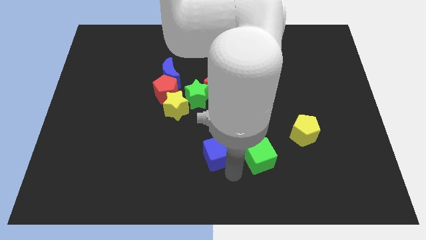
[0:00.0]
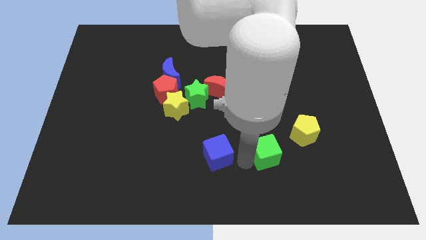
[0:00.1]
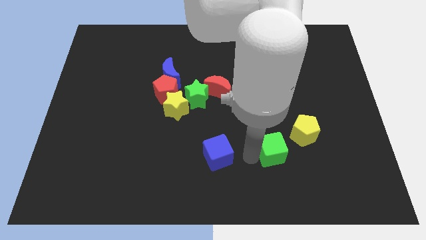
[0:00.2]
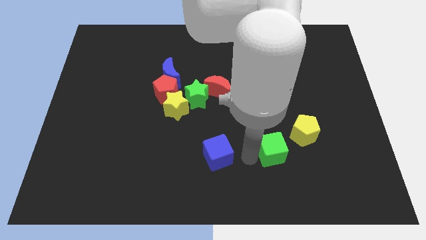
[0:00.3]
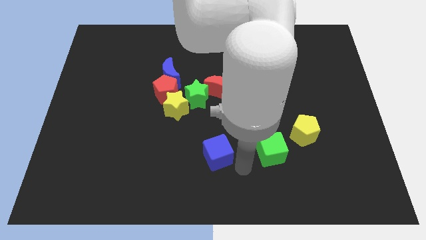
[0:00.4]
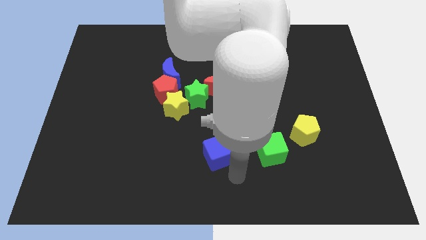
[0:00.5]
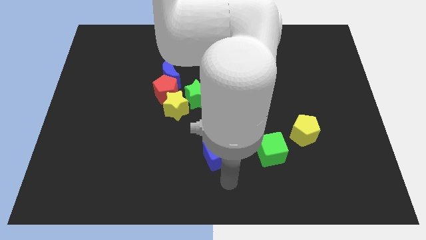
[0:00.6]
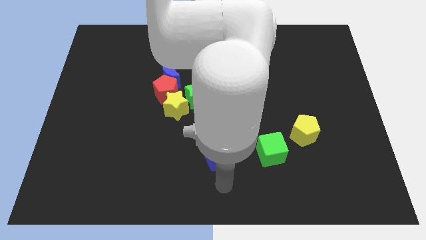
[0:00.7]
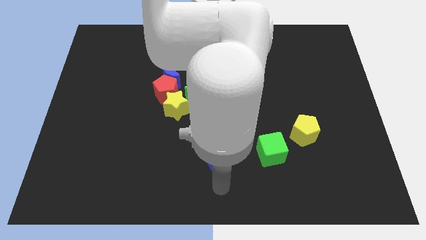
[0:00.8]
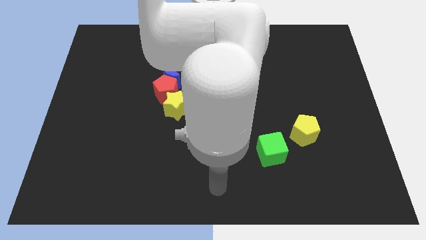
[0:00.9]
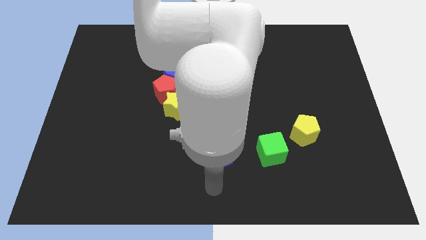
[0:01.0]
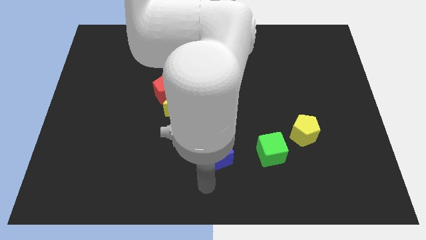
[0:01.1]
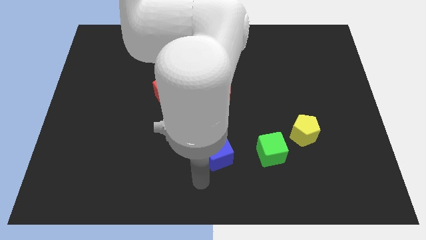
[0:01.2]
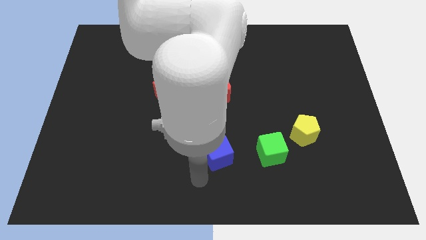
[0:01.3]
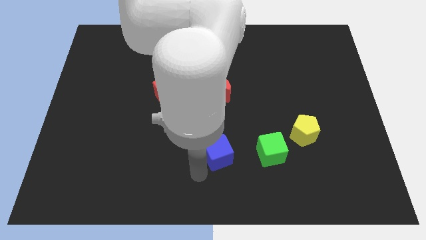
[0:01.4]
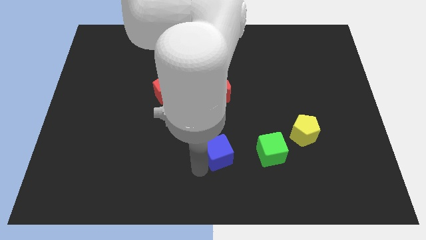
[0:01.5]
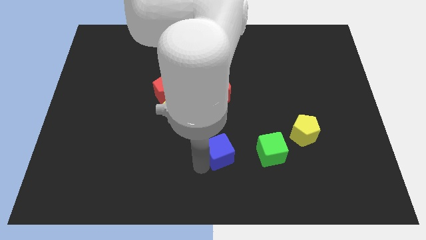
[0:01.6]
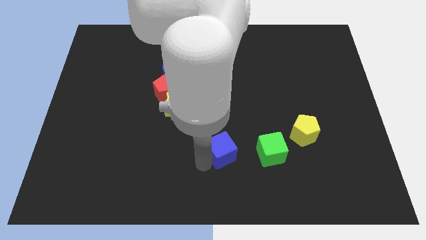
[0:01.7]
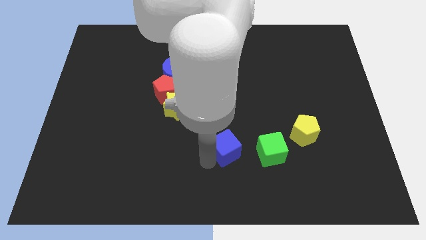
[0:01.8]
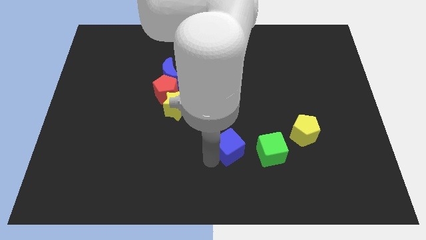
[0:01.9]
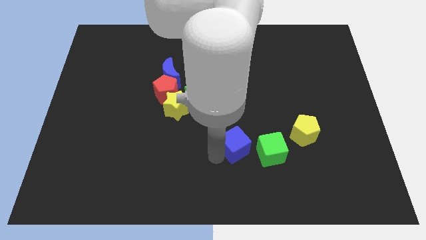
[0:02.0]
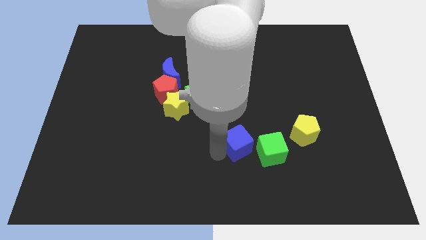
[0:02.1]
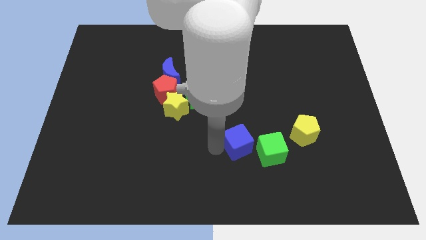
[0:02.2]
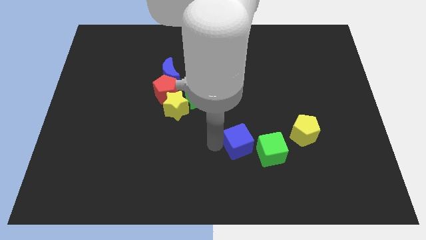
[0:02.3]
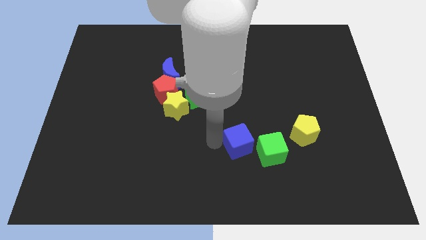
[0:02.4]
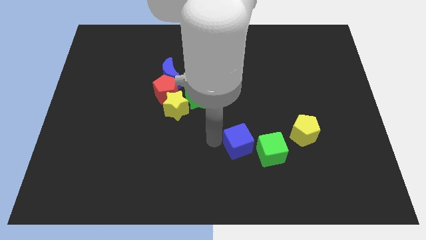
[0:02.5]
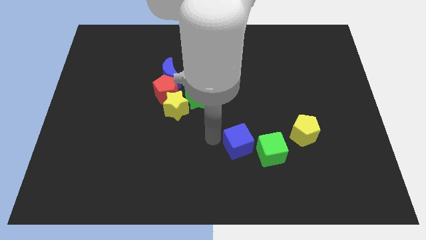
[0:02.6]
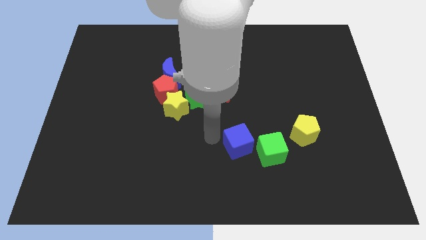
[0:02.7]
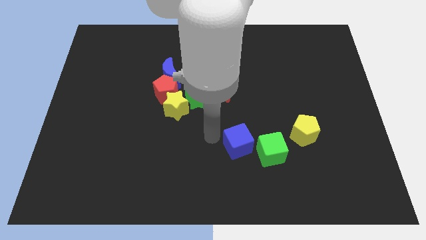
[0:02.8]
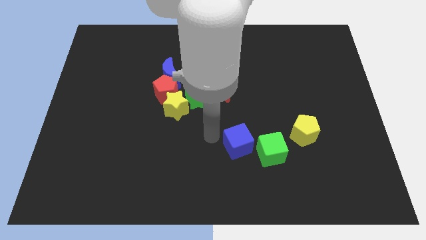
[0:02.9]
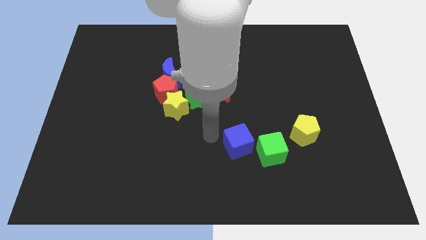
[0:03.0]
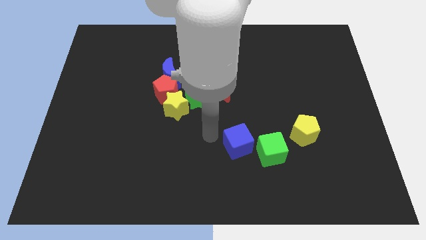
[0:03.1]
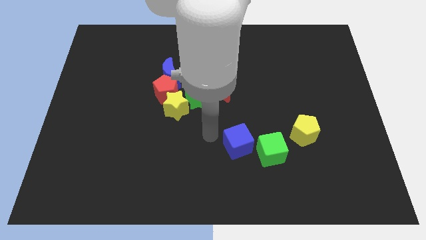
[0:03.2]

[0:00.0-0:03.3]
push the blue cube diagonally to the green cube to the left of the yellow pentagon

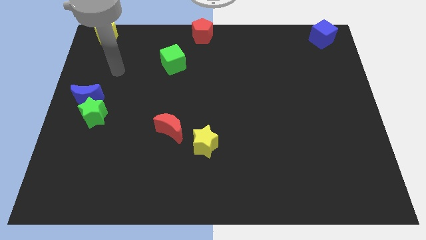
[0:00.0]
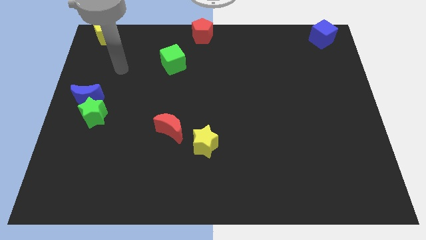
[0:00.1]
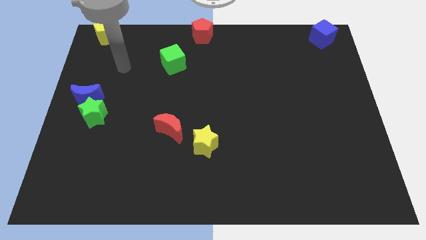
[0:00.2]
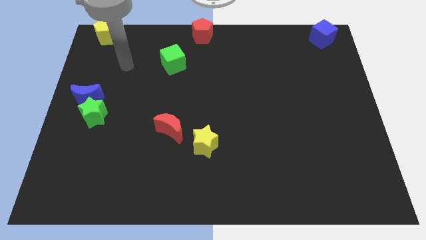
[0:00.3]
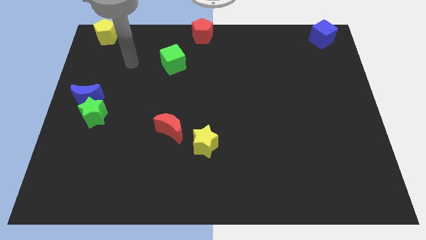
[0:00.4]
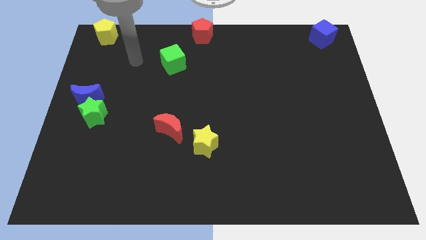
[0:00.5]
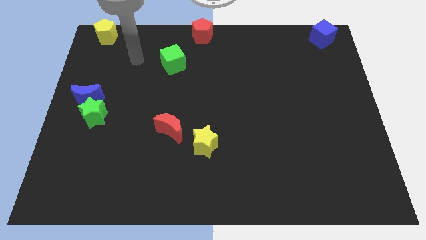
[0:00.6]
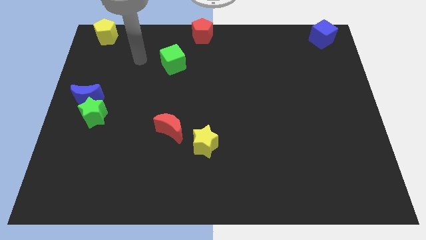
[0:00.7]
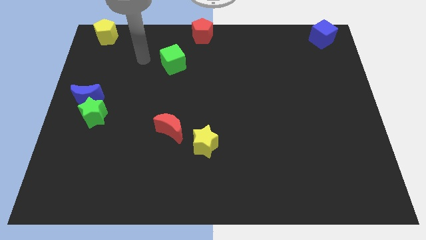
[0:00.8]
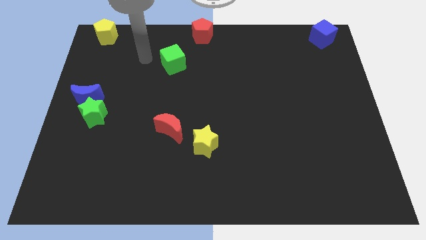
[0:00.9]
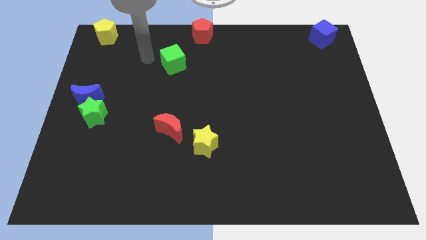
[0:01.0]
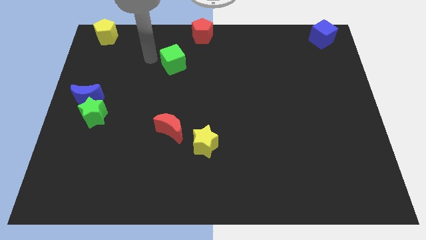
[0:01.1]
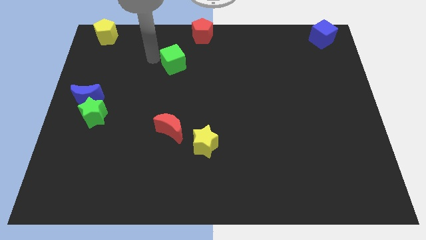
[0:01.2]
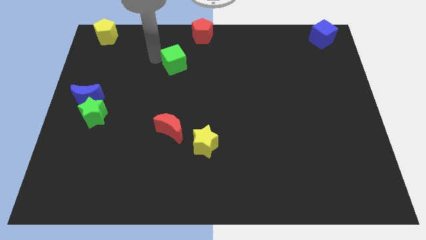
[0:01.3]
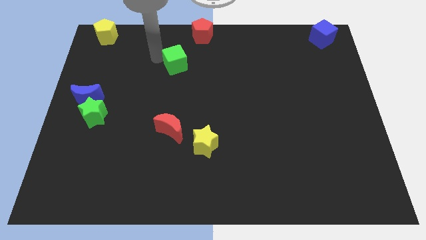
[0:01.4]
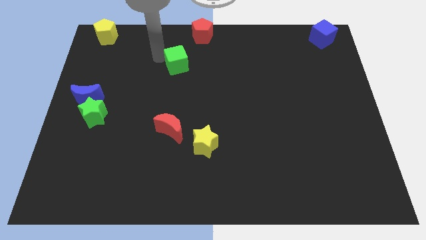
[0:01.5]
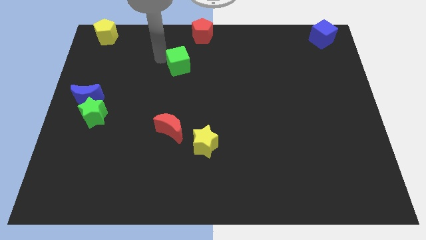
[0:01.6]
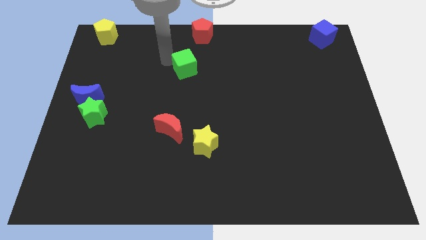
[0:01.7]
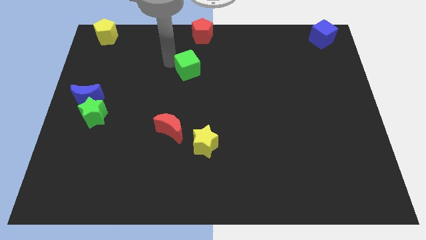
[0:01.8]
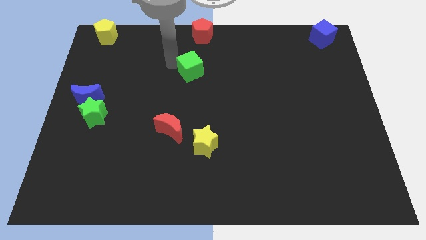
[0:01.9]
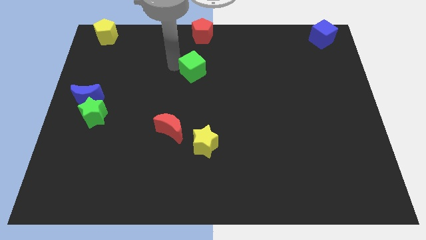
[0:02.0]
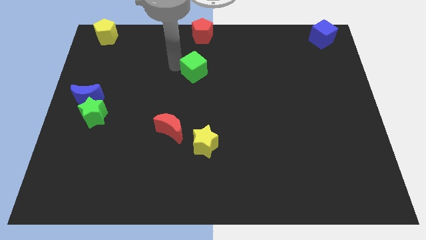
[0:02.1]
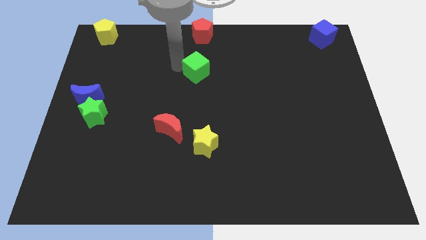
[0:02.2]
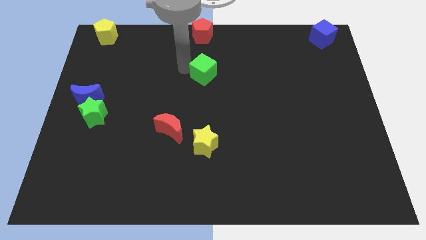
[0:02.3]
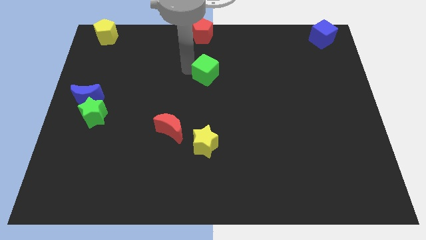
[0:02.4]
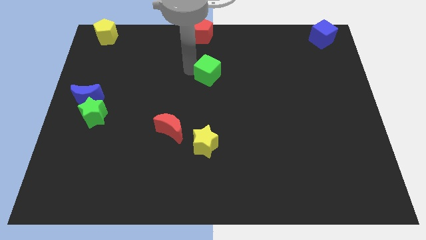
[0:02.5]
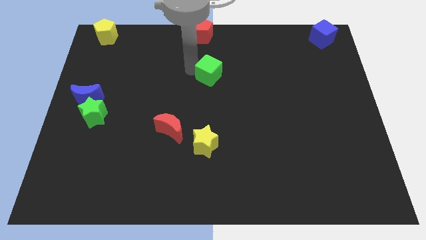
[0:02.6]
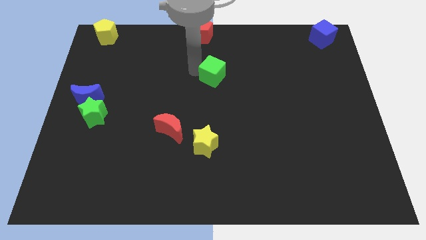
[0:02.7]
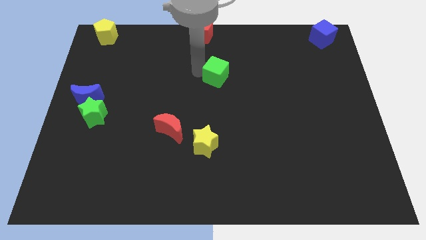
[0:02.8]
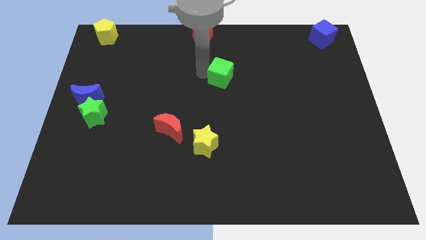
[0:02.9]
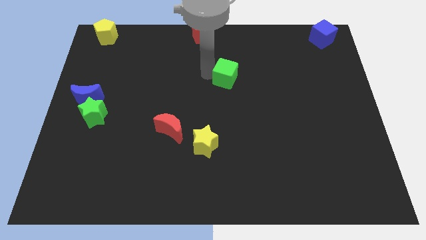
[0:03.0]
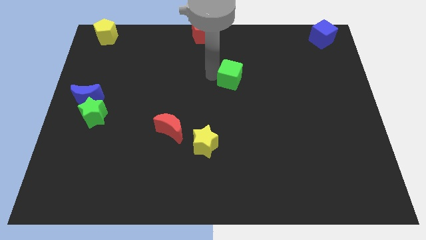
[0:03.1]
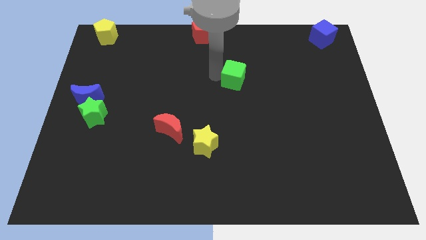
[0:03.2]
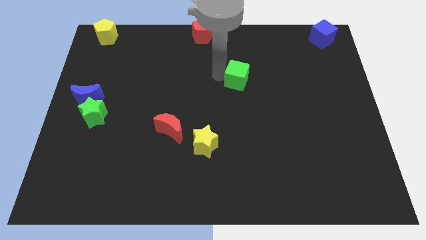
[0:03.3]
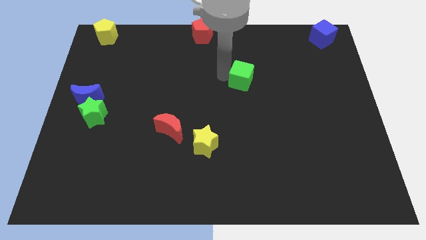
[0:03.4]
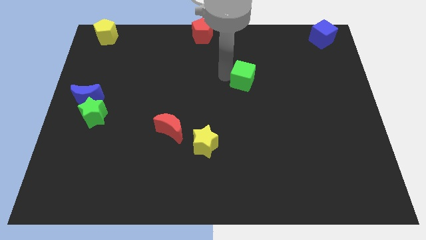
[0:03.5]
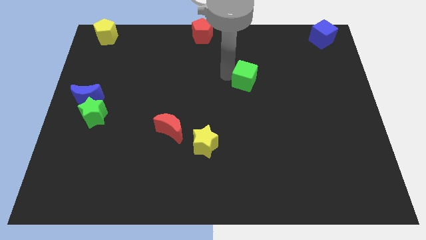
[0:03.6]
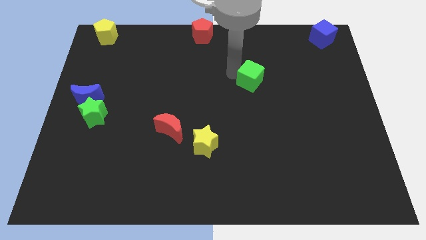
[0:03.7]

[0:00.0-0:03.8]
move the green cube diagonally on the top right side of the yellow star

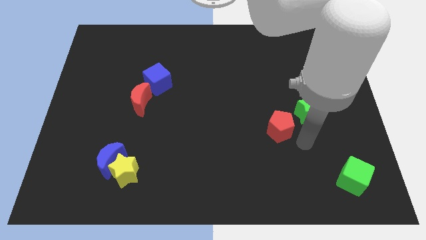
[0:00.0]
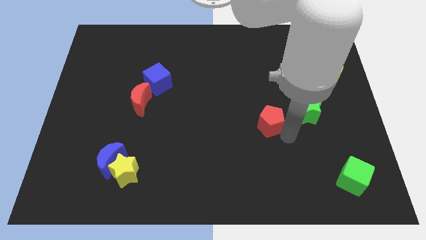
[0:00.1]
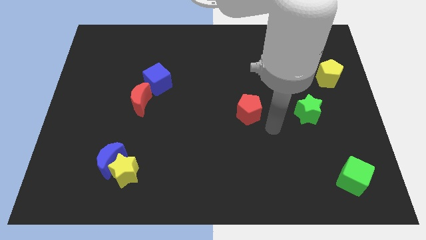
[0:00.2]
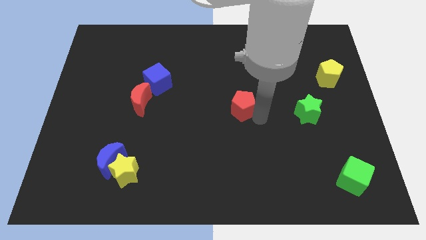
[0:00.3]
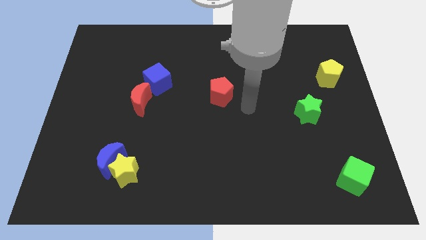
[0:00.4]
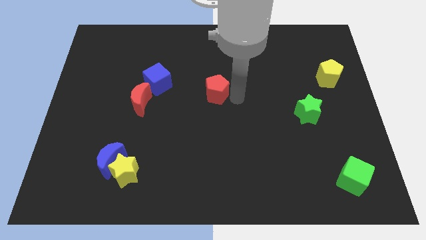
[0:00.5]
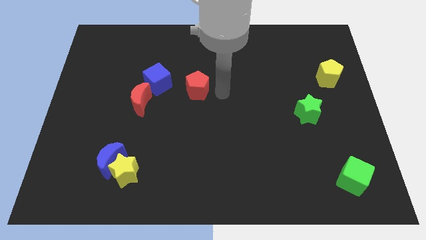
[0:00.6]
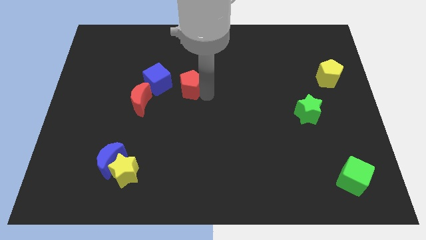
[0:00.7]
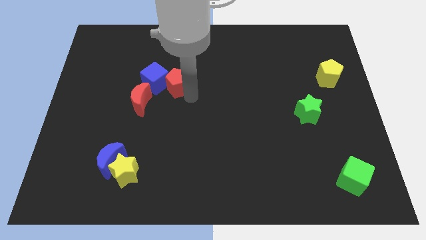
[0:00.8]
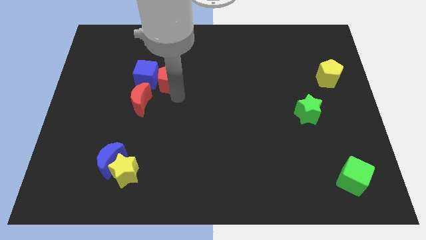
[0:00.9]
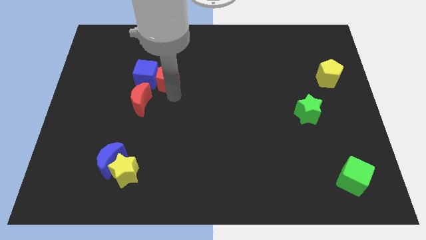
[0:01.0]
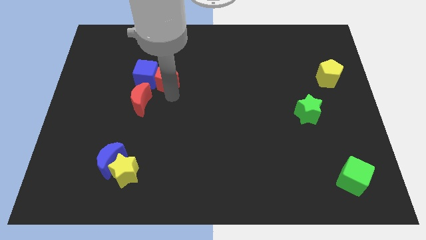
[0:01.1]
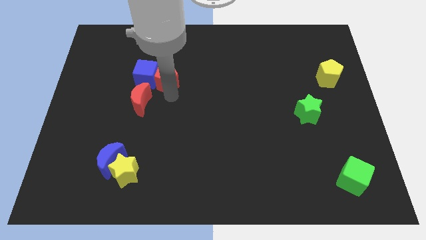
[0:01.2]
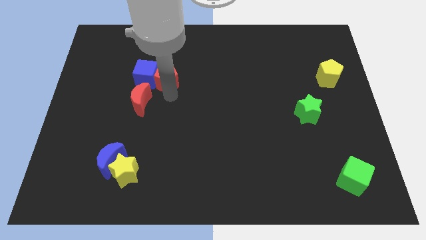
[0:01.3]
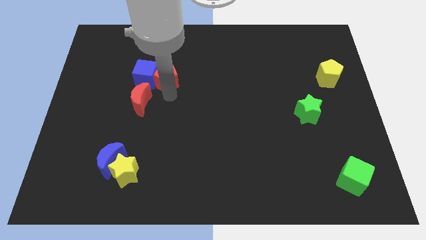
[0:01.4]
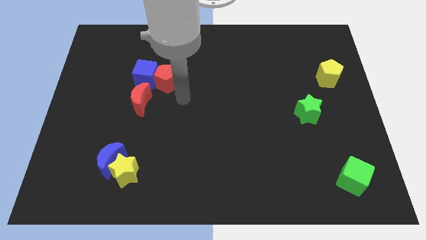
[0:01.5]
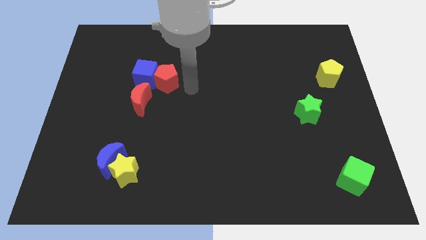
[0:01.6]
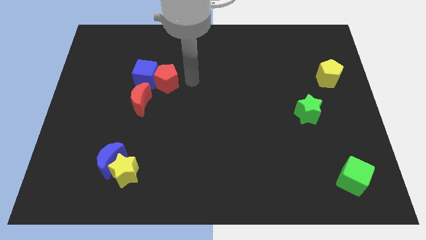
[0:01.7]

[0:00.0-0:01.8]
move the red pentagon into the blue cube
